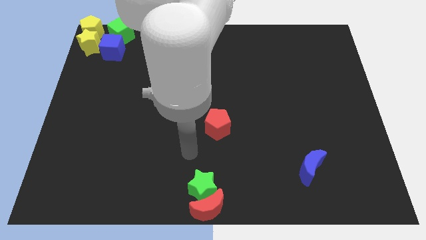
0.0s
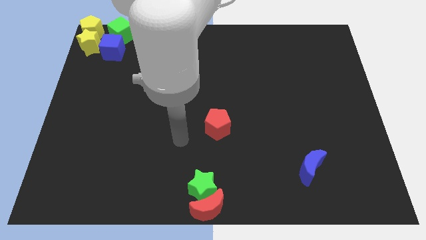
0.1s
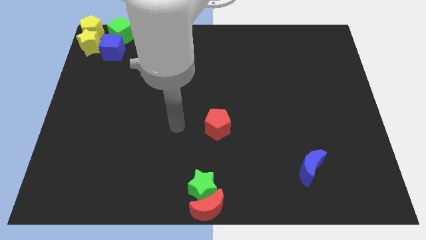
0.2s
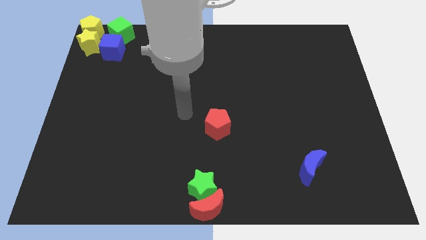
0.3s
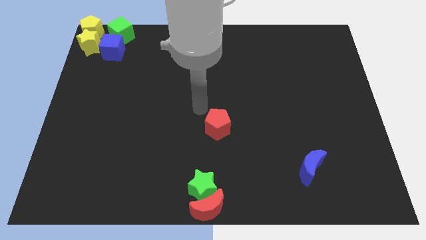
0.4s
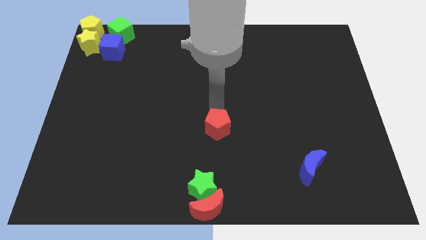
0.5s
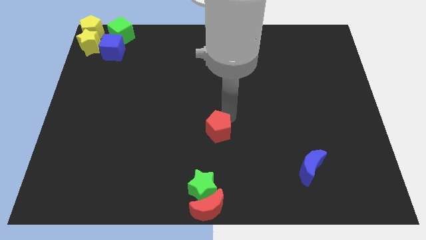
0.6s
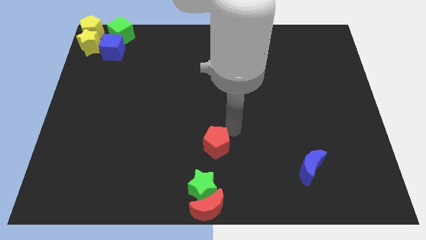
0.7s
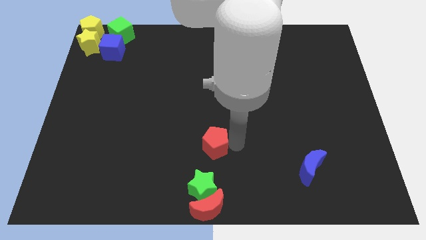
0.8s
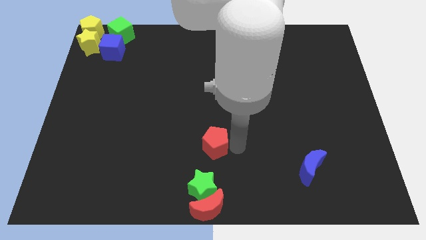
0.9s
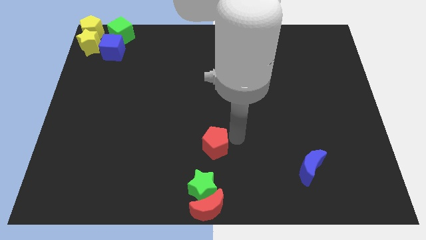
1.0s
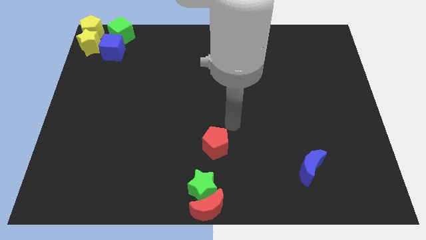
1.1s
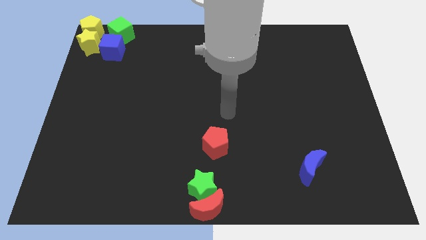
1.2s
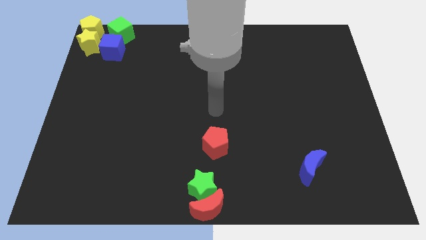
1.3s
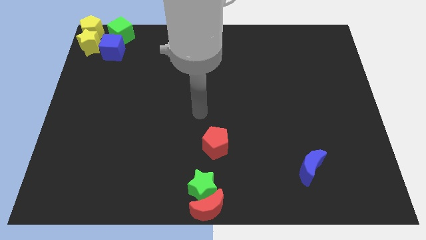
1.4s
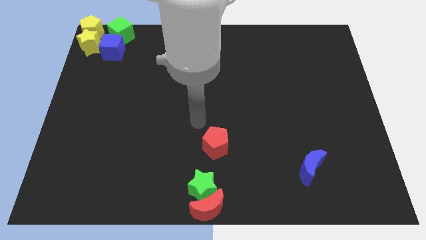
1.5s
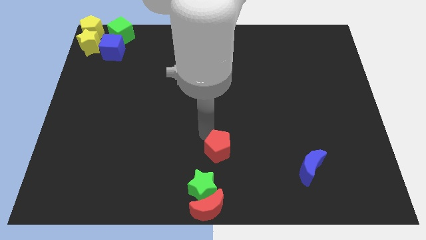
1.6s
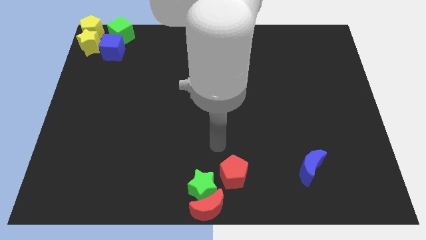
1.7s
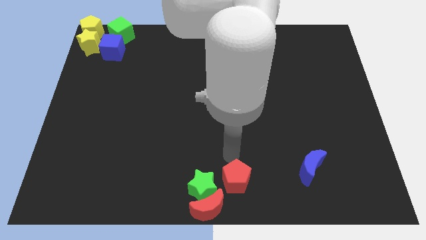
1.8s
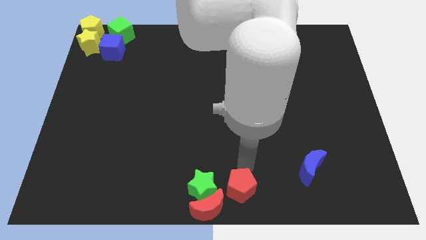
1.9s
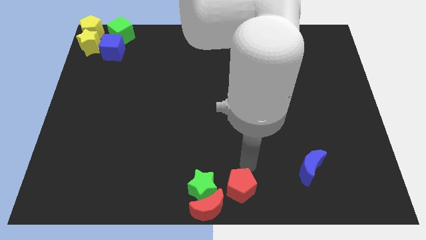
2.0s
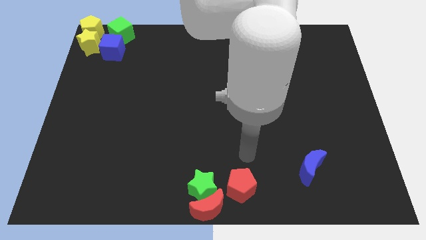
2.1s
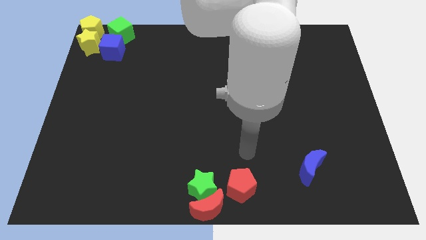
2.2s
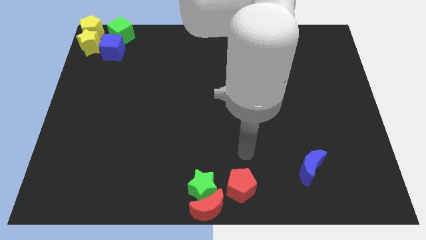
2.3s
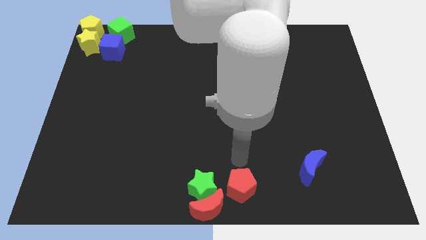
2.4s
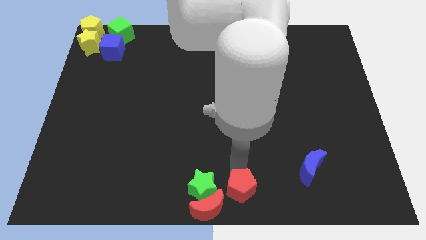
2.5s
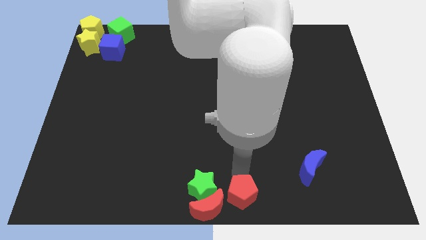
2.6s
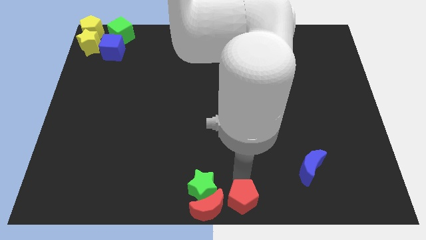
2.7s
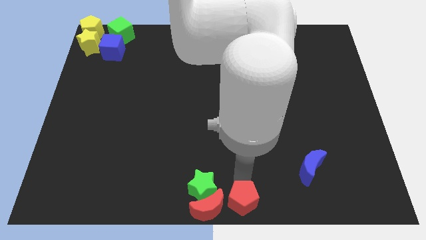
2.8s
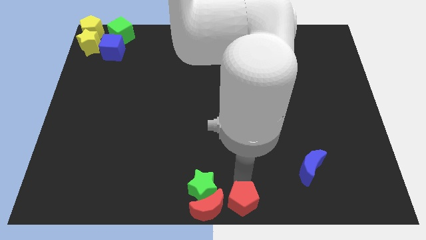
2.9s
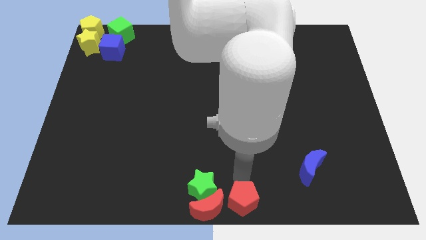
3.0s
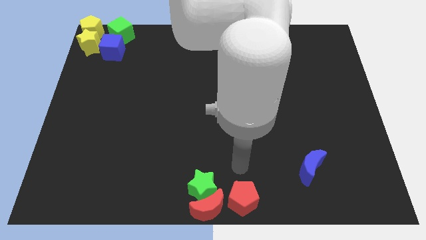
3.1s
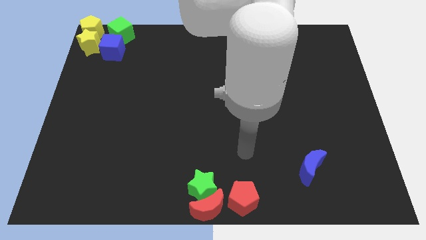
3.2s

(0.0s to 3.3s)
place the red pentagon towards the right side of the red crescent

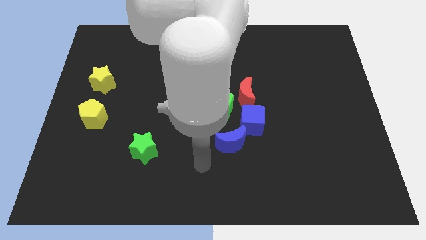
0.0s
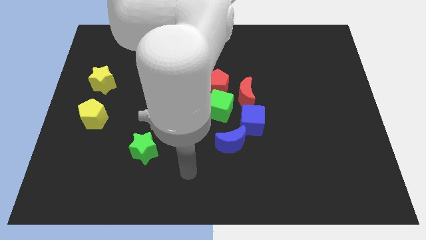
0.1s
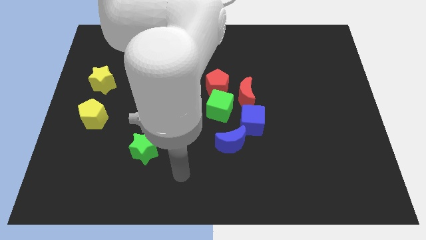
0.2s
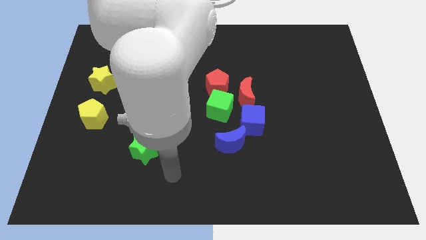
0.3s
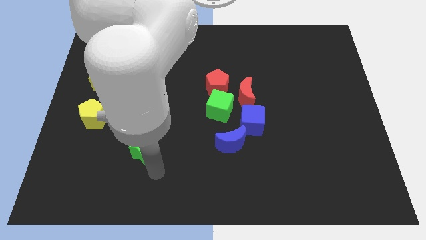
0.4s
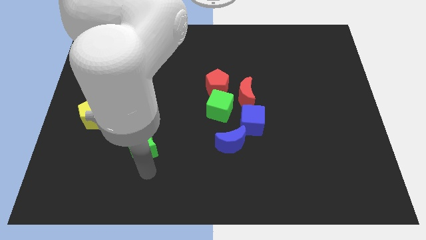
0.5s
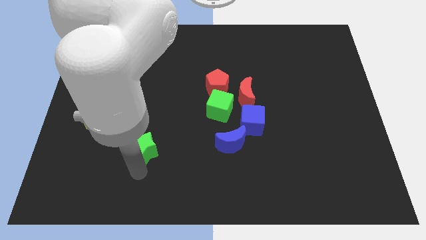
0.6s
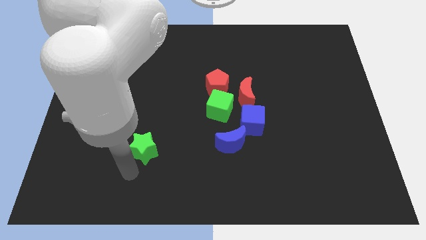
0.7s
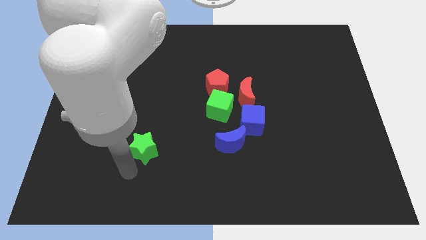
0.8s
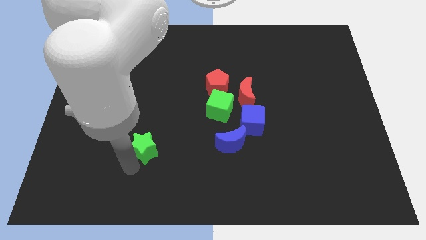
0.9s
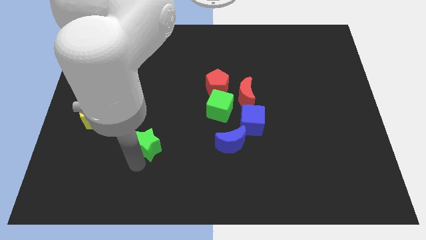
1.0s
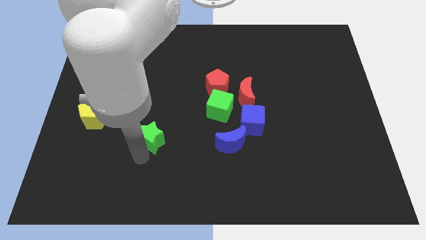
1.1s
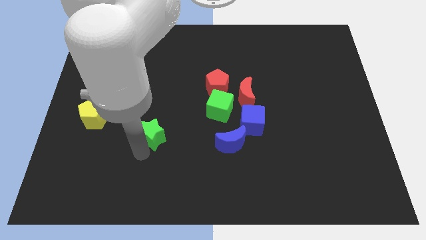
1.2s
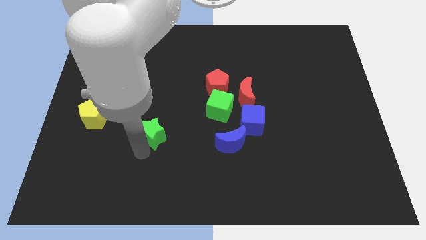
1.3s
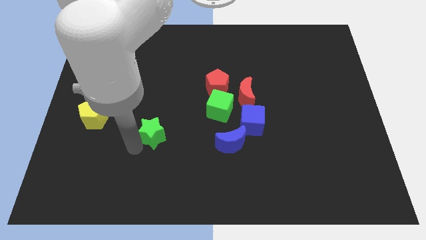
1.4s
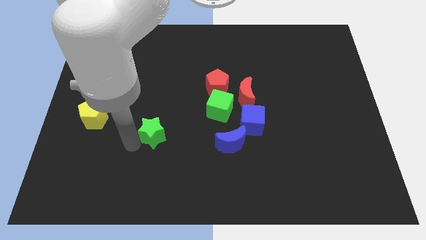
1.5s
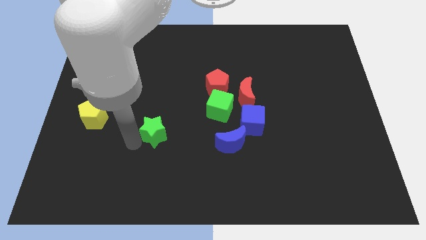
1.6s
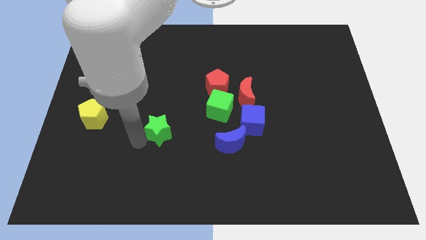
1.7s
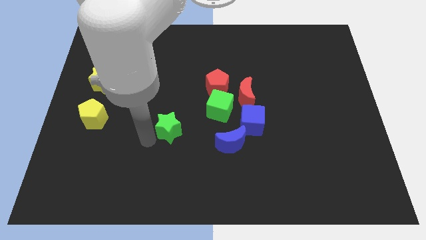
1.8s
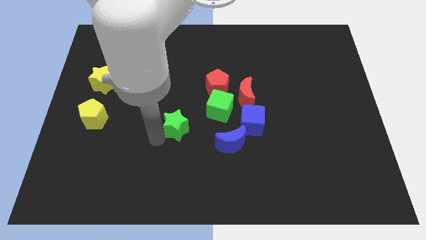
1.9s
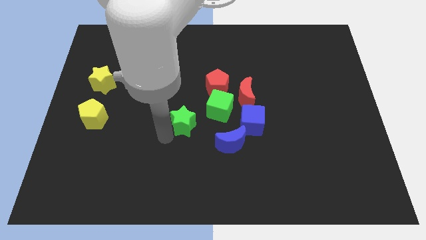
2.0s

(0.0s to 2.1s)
slide the green star towards the bottom left side of the green cube

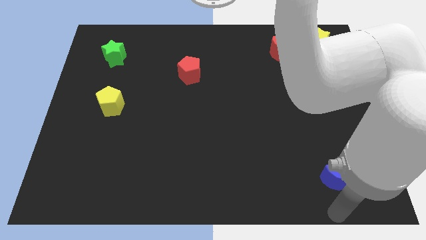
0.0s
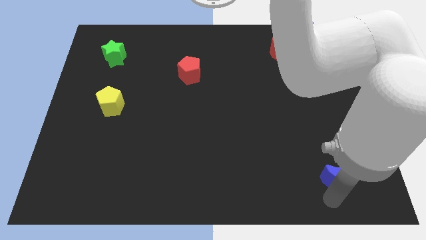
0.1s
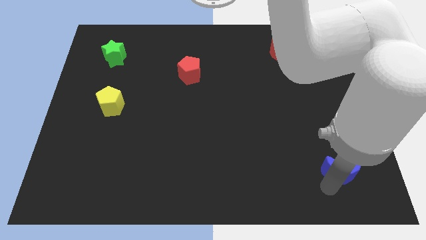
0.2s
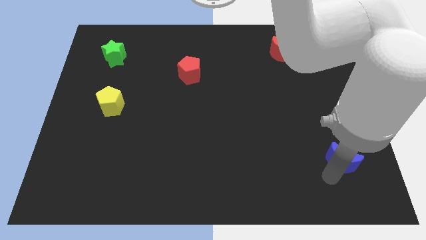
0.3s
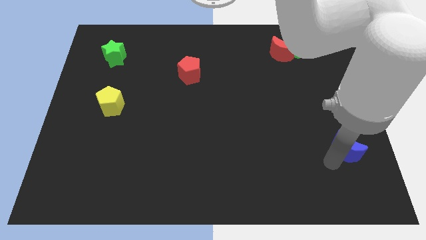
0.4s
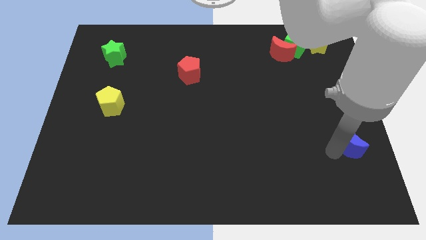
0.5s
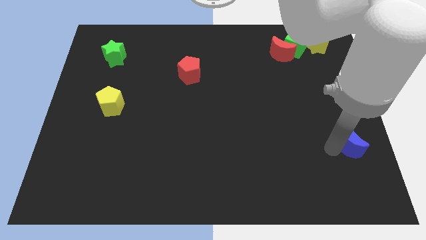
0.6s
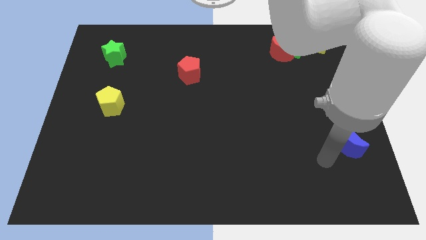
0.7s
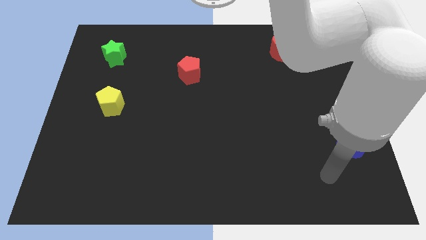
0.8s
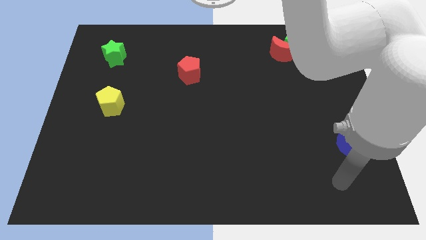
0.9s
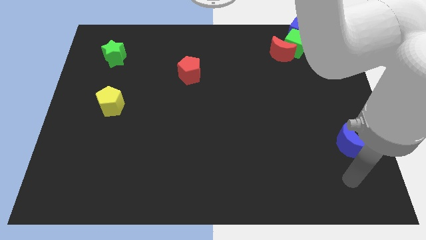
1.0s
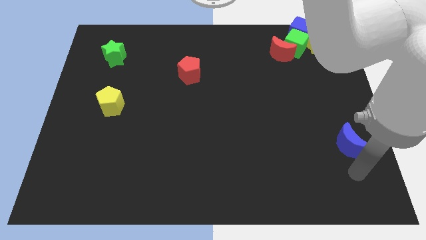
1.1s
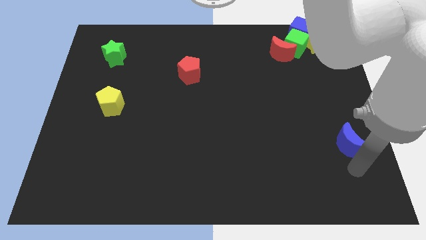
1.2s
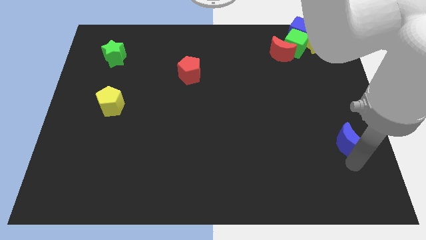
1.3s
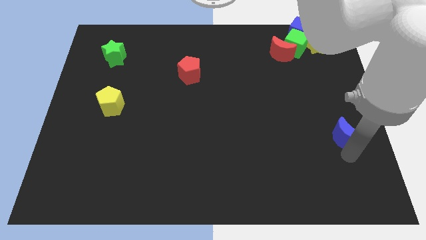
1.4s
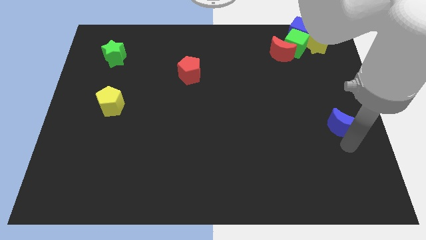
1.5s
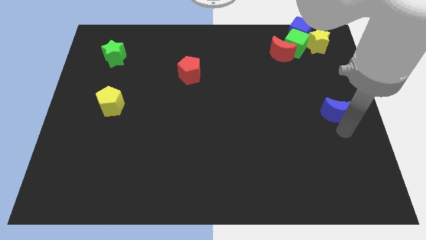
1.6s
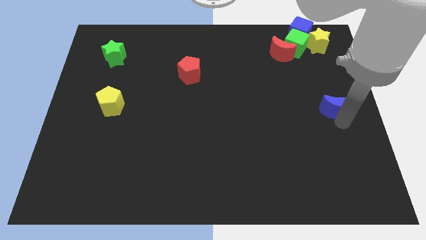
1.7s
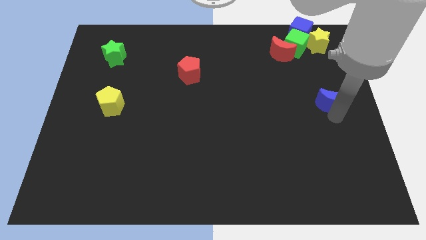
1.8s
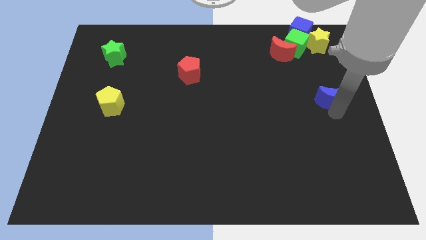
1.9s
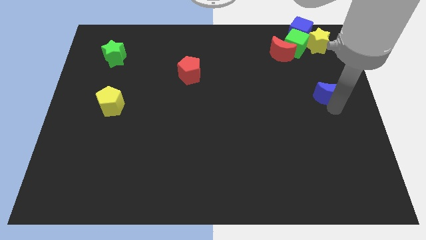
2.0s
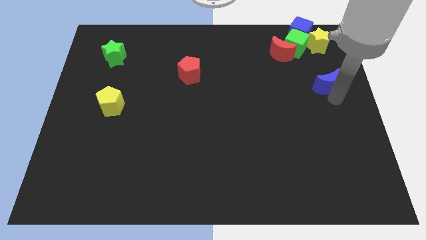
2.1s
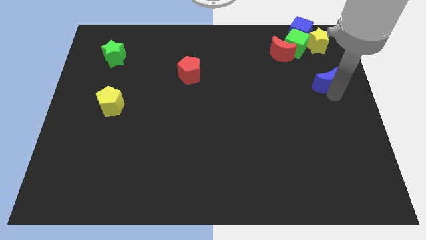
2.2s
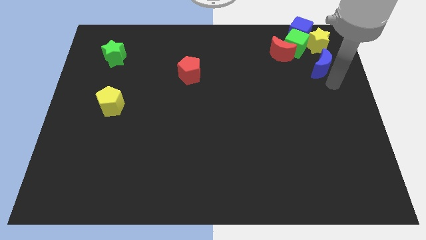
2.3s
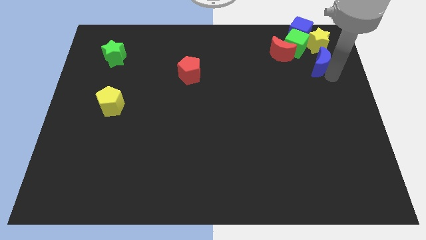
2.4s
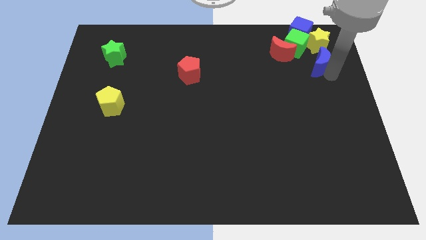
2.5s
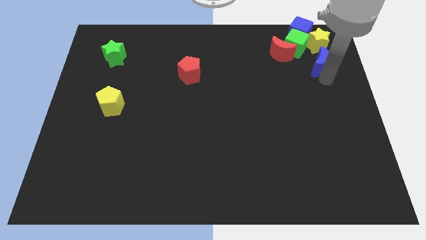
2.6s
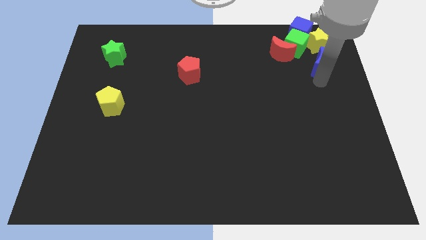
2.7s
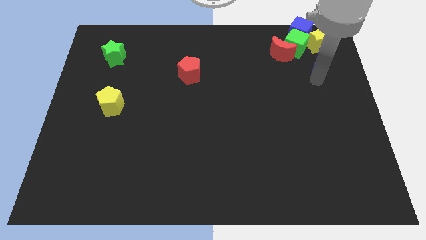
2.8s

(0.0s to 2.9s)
move blue moon below yellow star

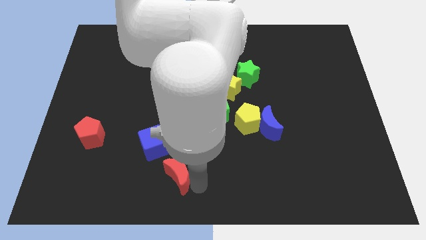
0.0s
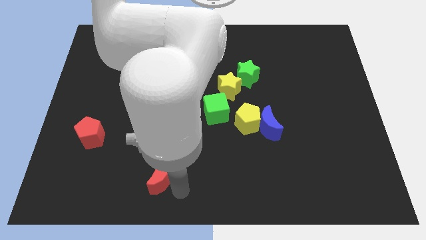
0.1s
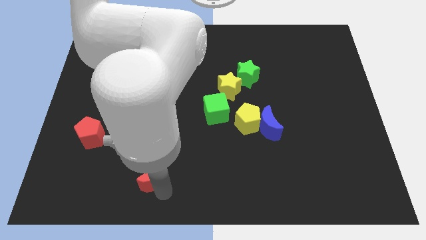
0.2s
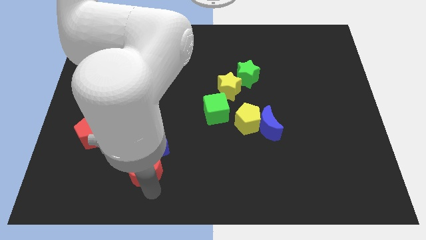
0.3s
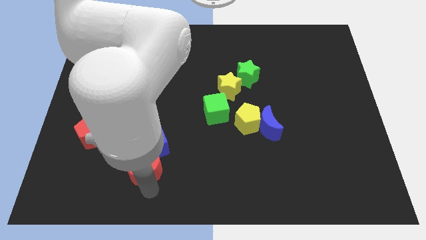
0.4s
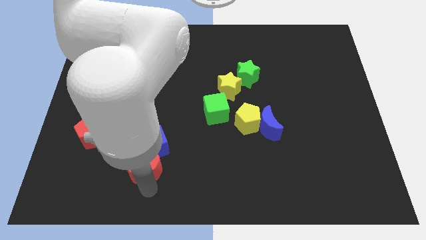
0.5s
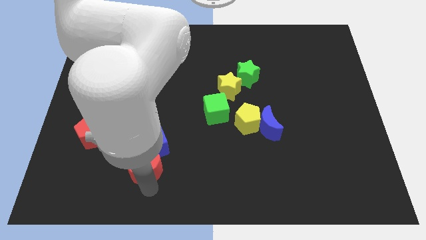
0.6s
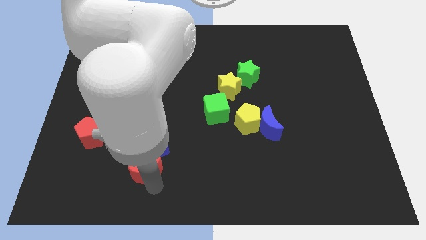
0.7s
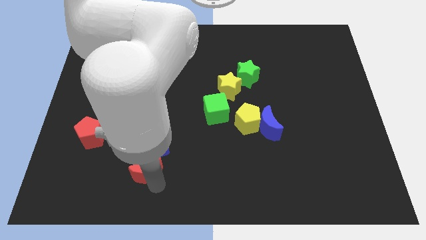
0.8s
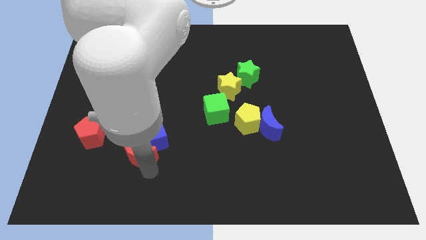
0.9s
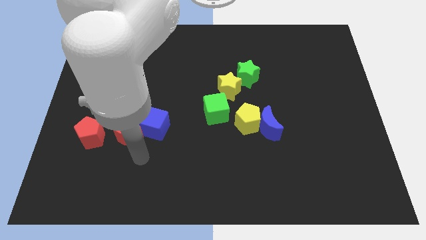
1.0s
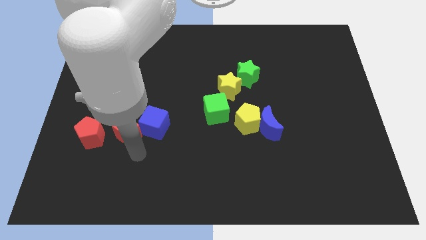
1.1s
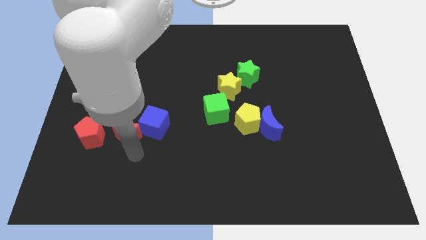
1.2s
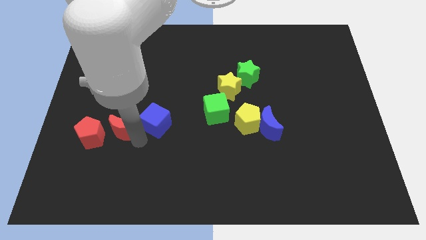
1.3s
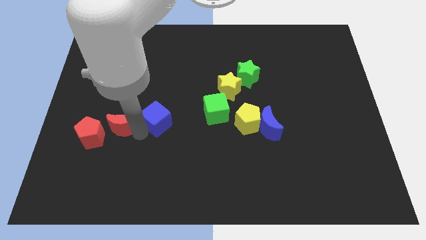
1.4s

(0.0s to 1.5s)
push the red moon into the blue cube
